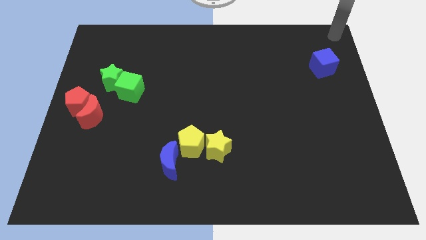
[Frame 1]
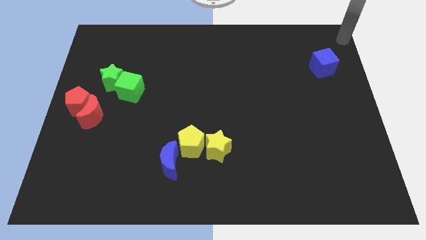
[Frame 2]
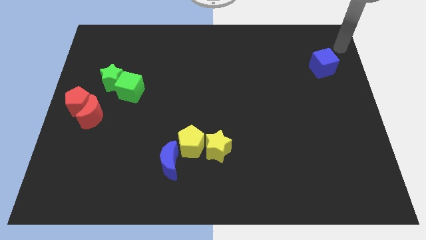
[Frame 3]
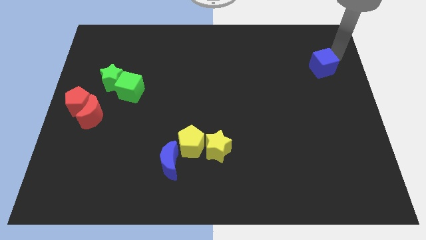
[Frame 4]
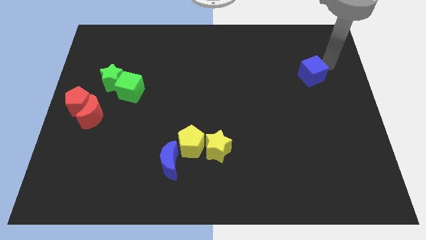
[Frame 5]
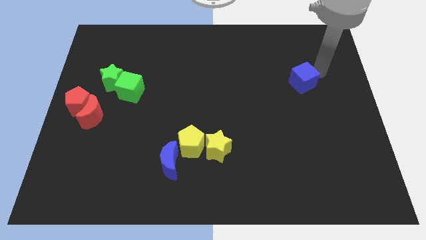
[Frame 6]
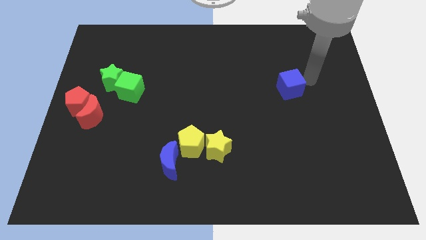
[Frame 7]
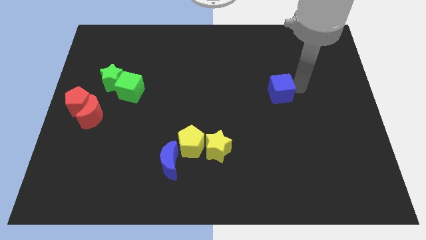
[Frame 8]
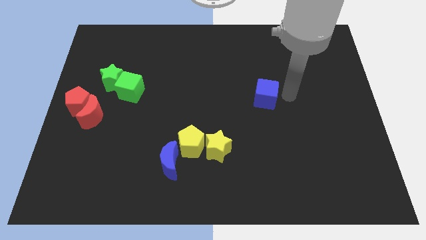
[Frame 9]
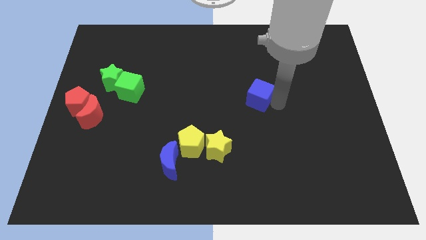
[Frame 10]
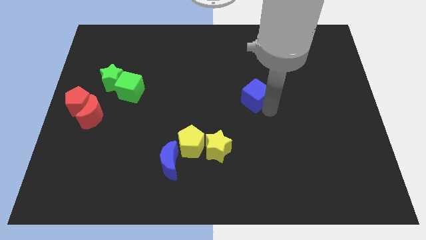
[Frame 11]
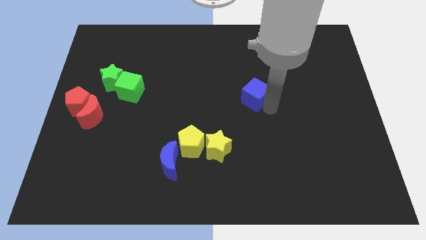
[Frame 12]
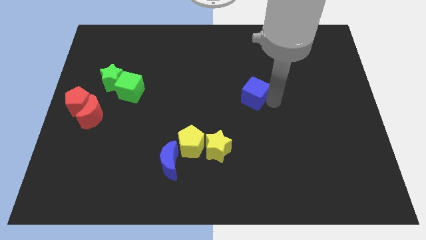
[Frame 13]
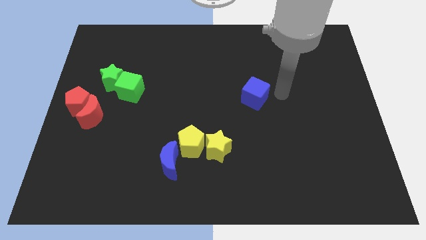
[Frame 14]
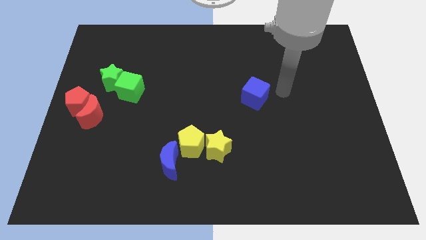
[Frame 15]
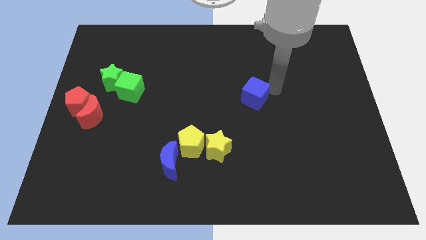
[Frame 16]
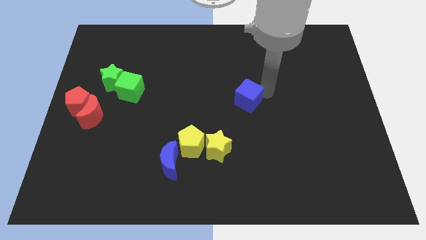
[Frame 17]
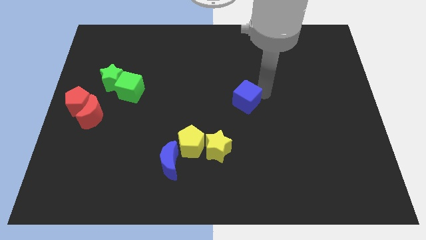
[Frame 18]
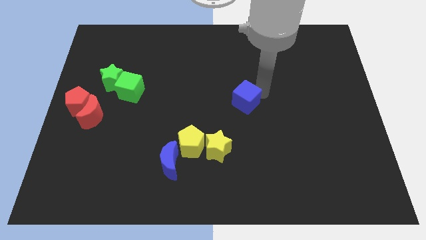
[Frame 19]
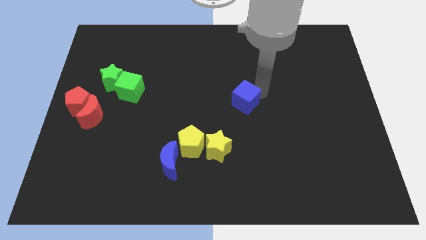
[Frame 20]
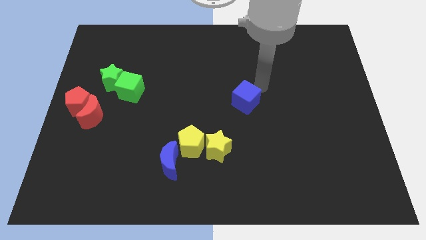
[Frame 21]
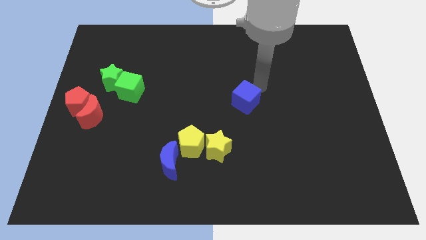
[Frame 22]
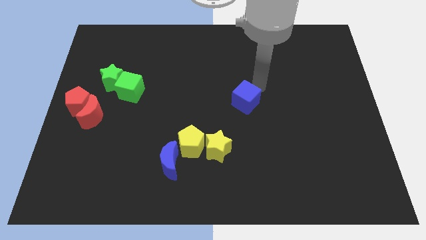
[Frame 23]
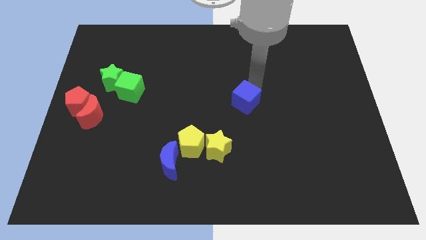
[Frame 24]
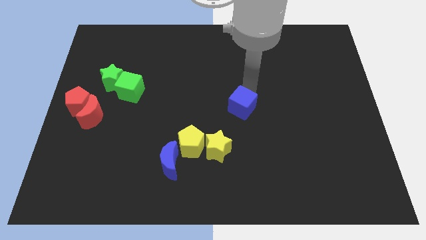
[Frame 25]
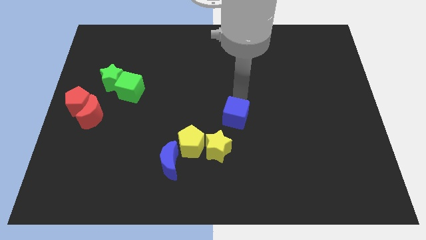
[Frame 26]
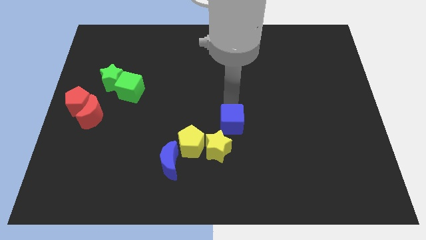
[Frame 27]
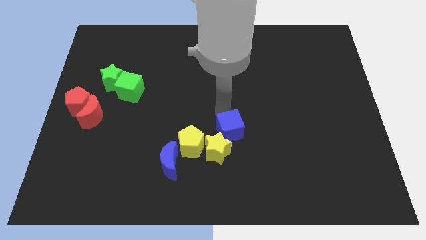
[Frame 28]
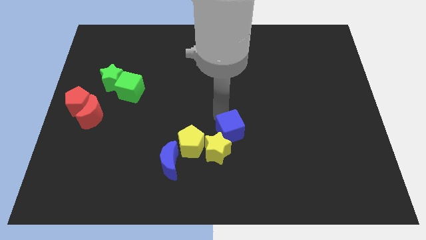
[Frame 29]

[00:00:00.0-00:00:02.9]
place the blue cube at the top of yellow star

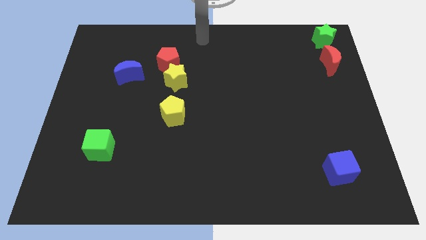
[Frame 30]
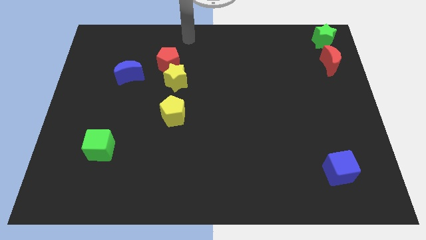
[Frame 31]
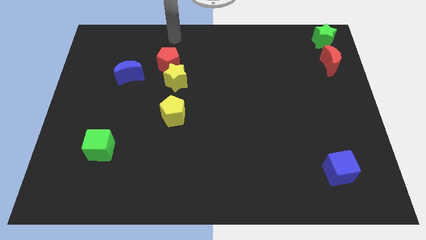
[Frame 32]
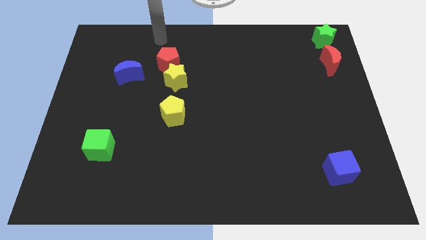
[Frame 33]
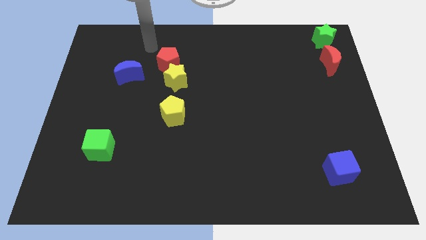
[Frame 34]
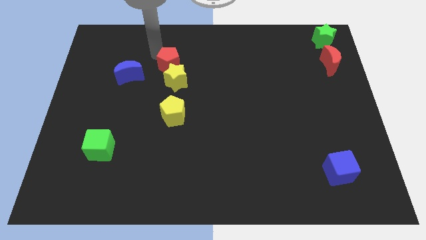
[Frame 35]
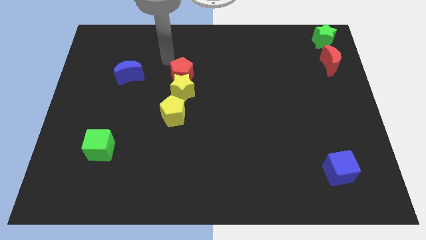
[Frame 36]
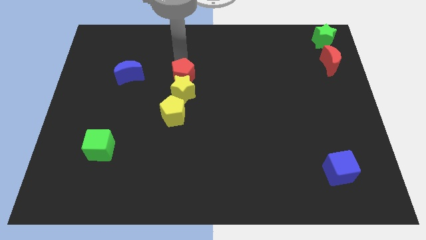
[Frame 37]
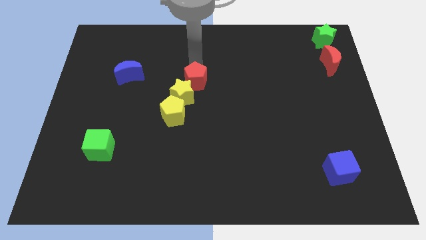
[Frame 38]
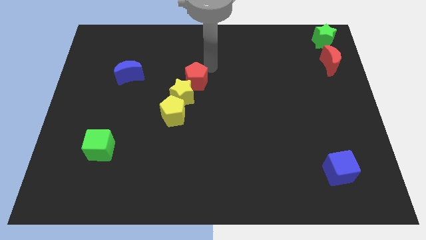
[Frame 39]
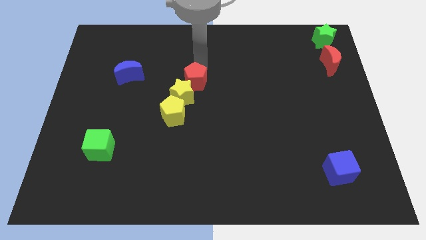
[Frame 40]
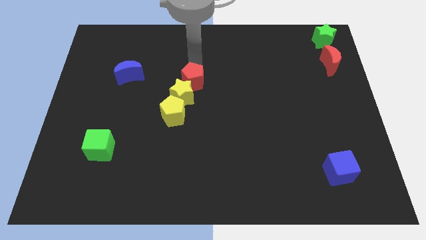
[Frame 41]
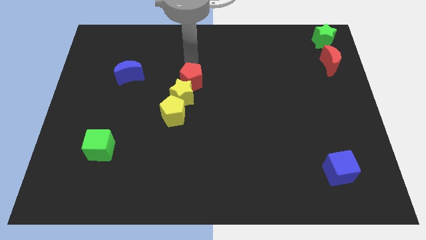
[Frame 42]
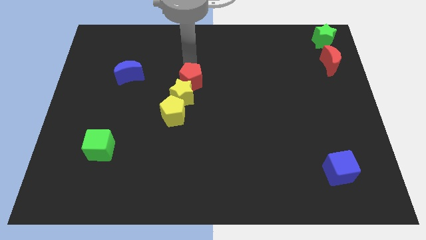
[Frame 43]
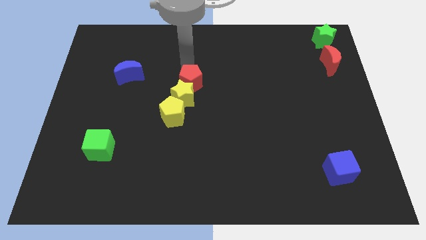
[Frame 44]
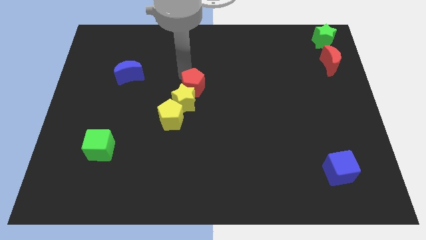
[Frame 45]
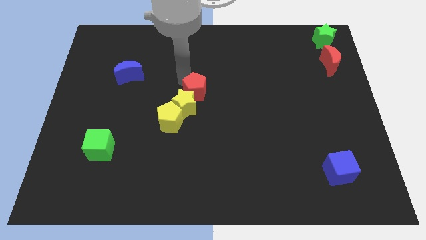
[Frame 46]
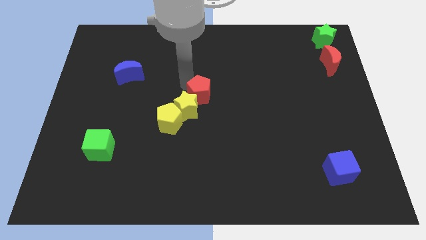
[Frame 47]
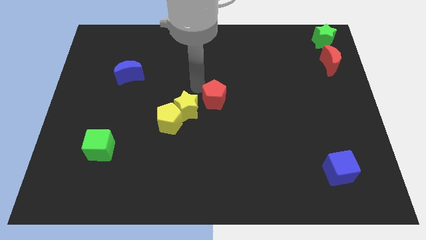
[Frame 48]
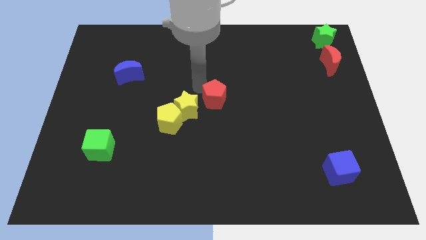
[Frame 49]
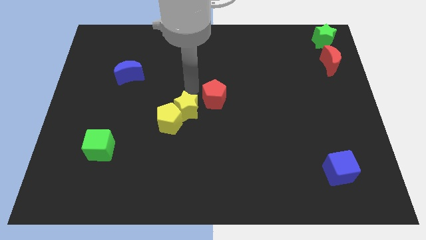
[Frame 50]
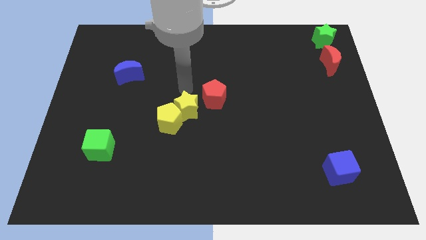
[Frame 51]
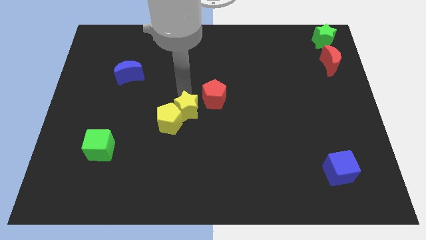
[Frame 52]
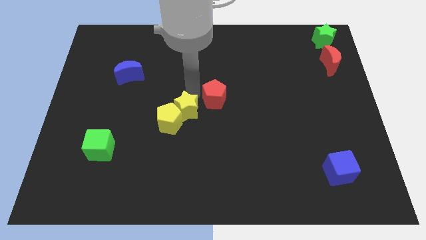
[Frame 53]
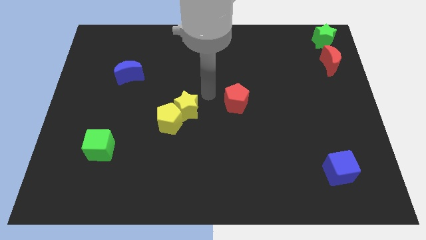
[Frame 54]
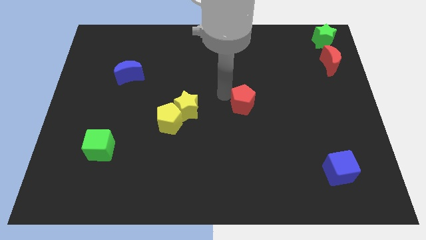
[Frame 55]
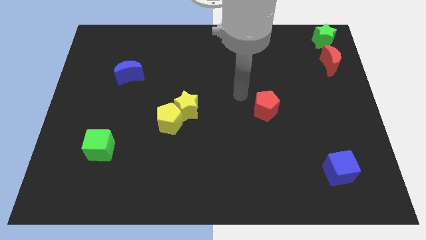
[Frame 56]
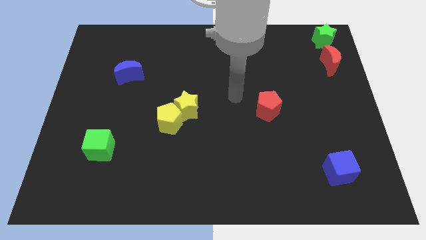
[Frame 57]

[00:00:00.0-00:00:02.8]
separate the red pentagon from yellow star

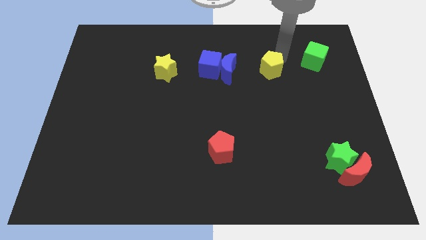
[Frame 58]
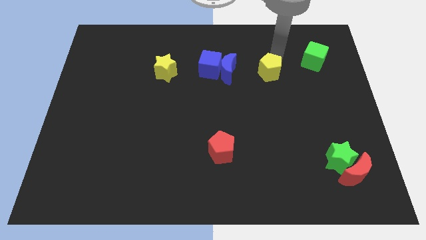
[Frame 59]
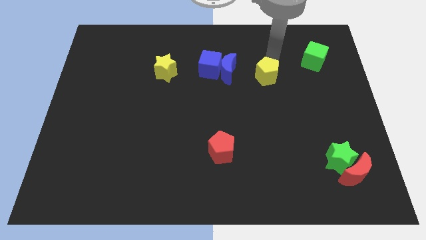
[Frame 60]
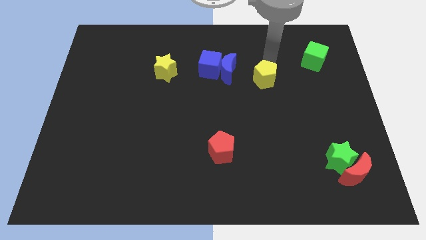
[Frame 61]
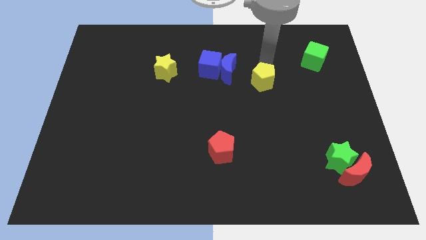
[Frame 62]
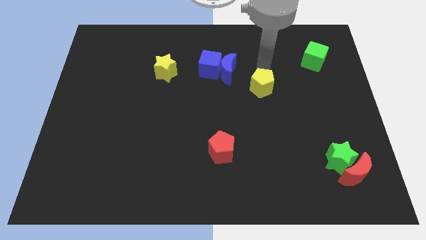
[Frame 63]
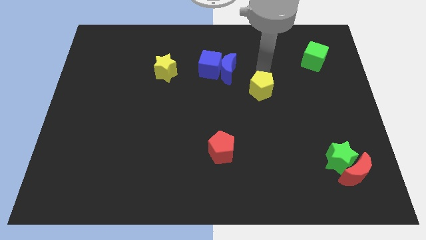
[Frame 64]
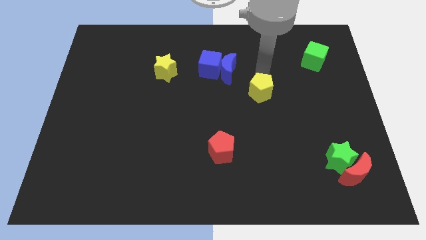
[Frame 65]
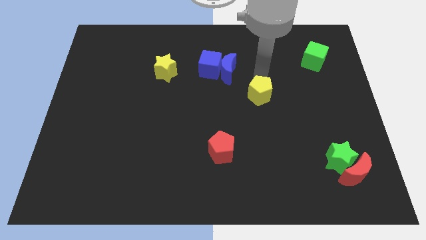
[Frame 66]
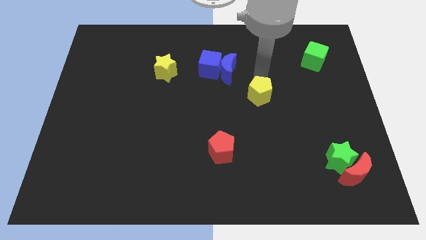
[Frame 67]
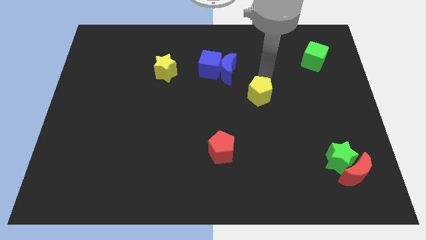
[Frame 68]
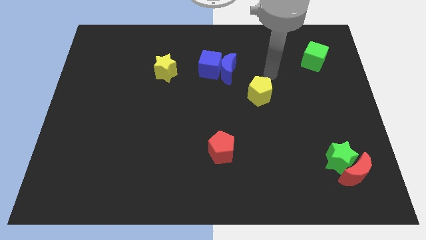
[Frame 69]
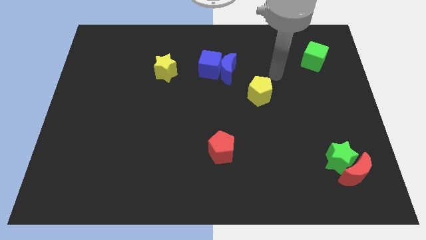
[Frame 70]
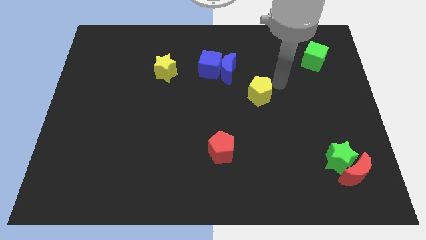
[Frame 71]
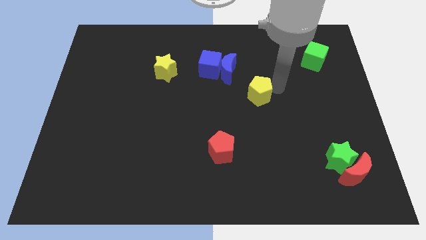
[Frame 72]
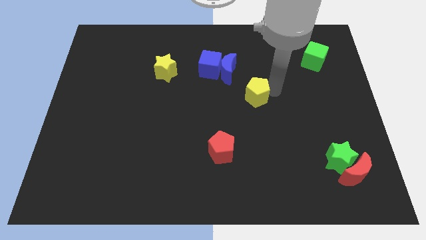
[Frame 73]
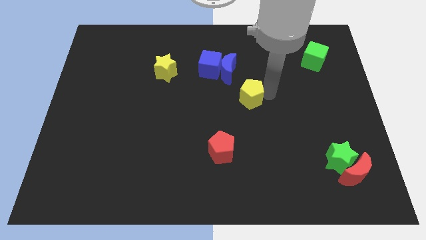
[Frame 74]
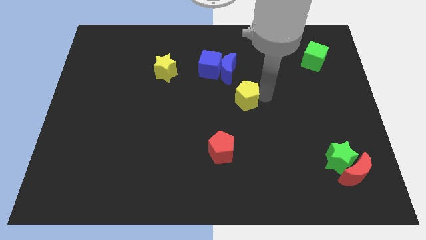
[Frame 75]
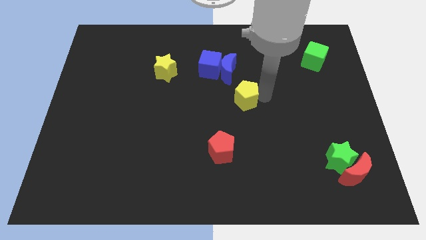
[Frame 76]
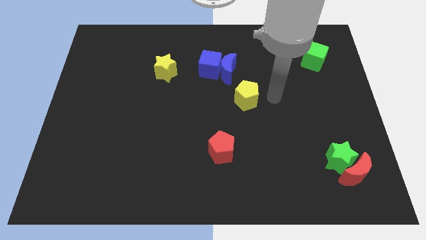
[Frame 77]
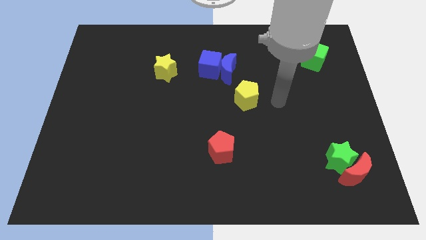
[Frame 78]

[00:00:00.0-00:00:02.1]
push the yellow pentagon down to the blue moon

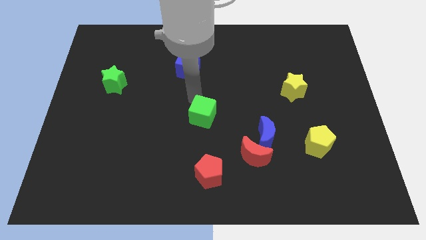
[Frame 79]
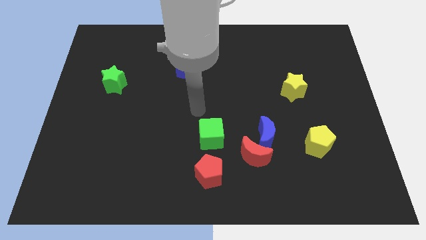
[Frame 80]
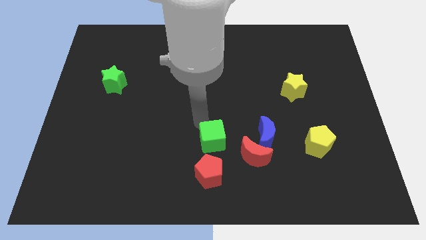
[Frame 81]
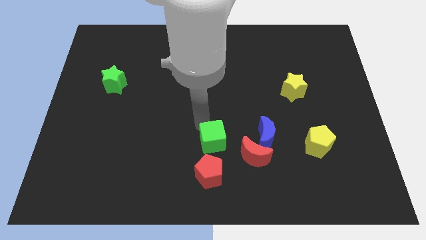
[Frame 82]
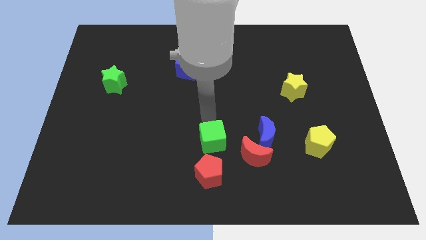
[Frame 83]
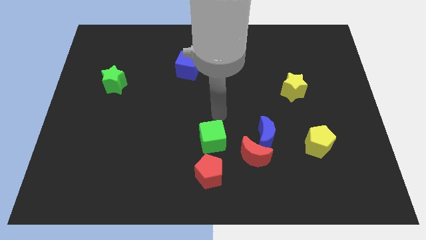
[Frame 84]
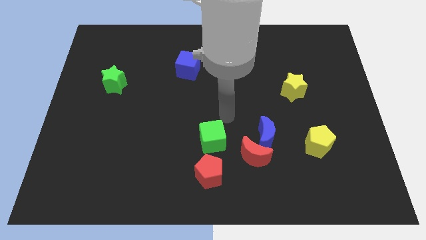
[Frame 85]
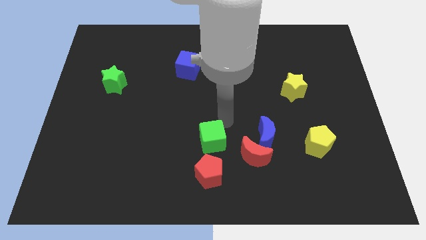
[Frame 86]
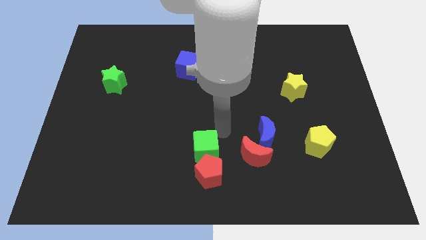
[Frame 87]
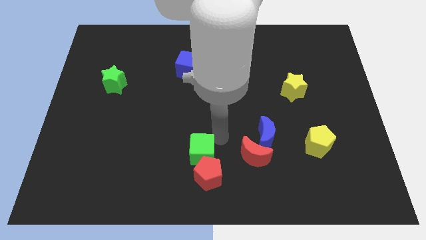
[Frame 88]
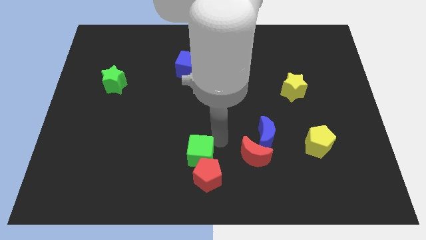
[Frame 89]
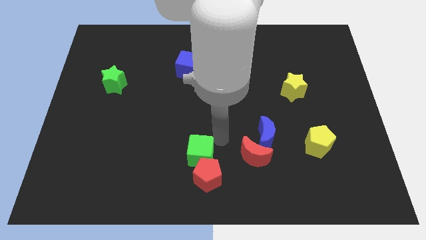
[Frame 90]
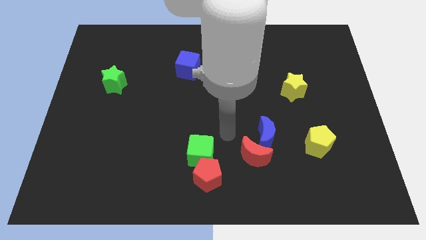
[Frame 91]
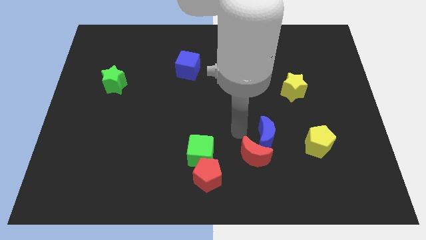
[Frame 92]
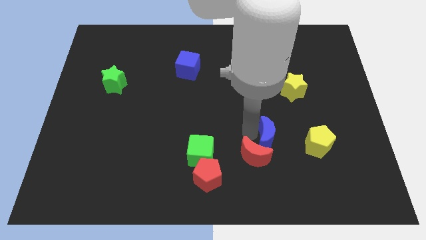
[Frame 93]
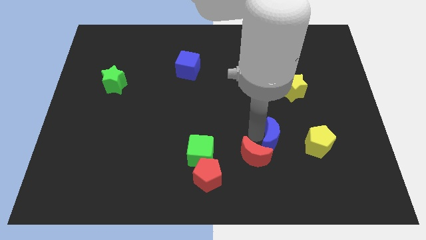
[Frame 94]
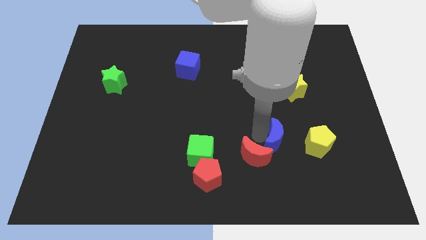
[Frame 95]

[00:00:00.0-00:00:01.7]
push the green cube into the red pentagon
